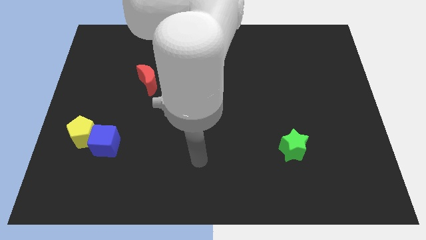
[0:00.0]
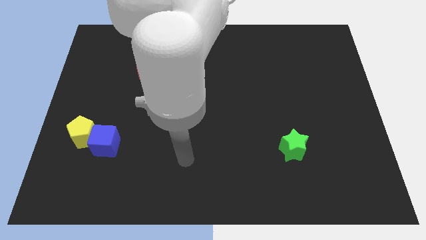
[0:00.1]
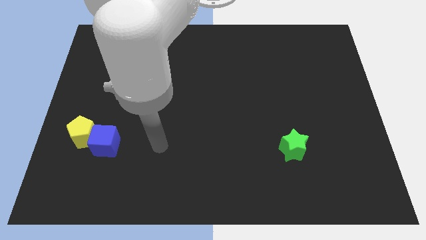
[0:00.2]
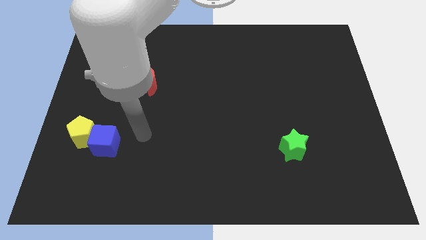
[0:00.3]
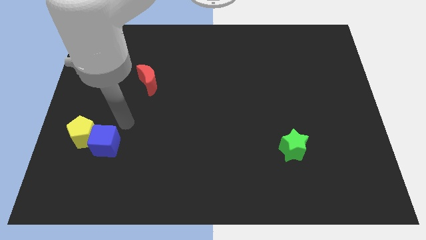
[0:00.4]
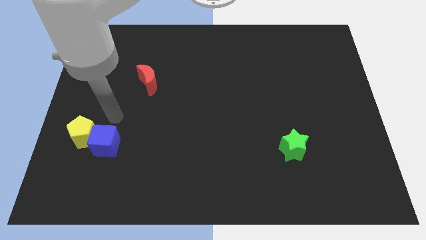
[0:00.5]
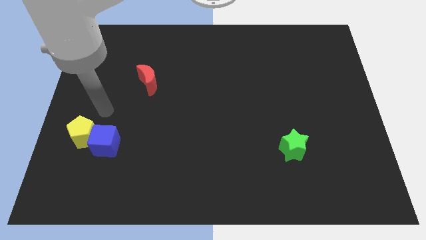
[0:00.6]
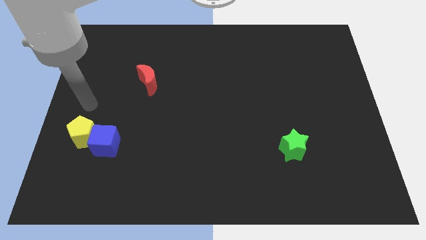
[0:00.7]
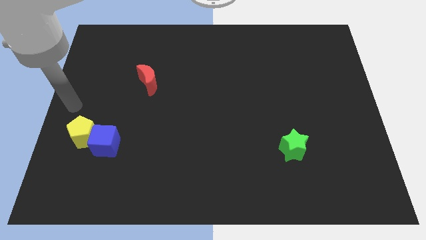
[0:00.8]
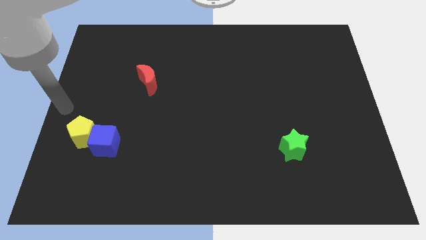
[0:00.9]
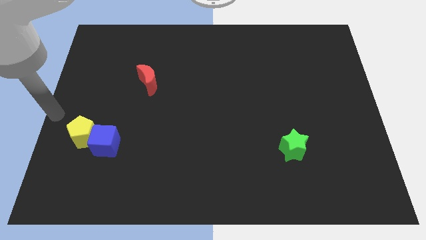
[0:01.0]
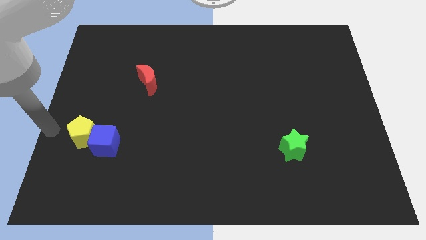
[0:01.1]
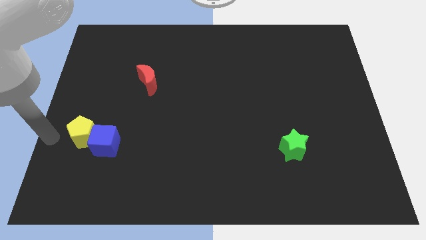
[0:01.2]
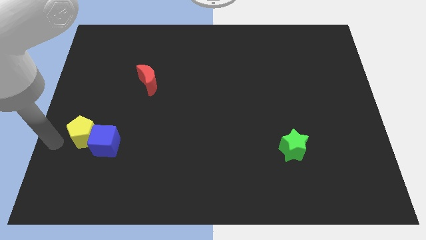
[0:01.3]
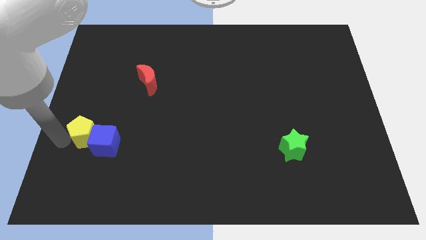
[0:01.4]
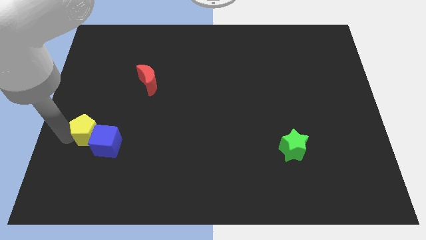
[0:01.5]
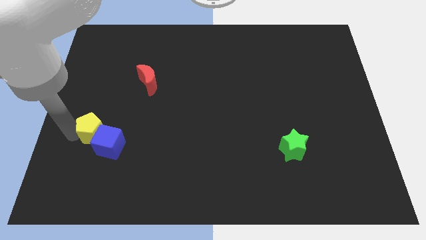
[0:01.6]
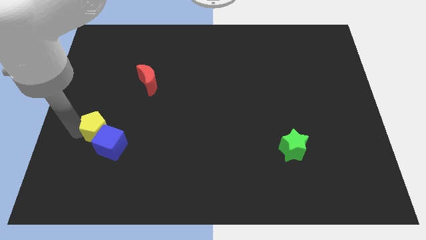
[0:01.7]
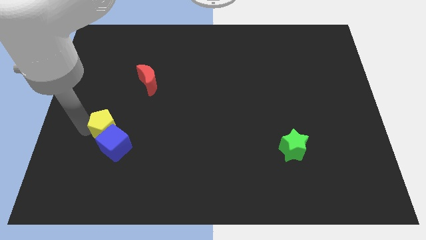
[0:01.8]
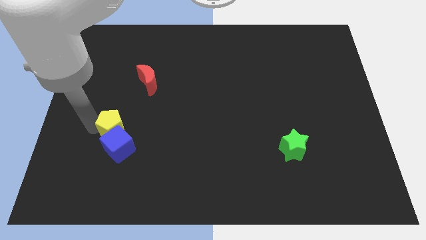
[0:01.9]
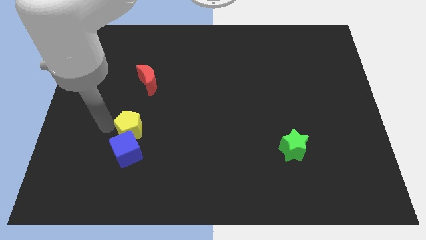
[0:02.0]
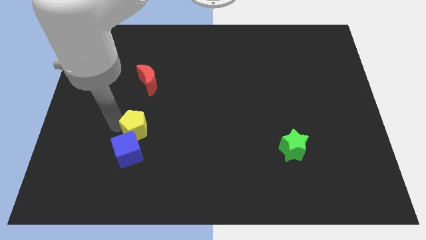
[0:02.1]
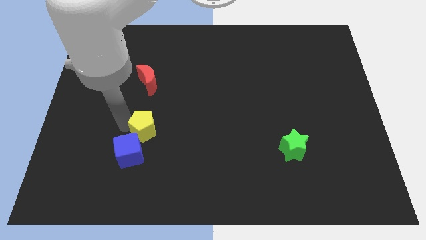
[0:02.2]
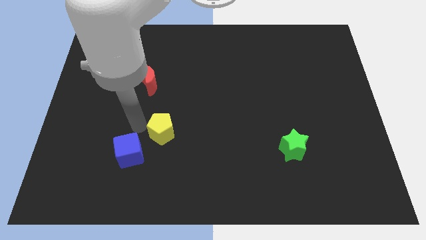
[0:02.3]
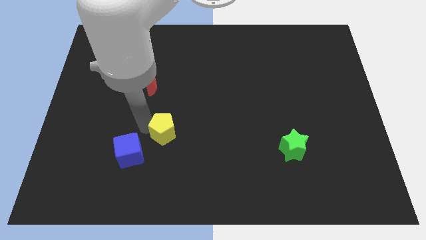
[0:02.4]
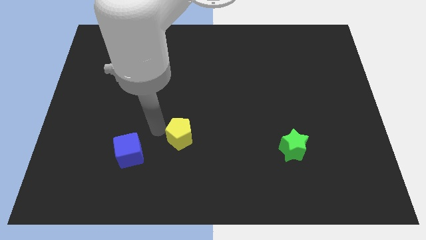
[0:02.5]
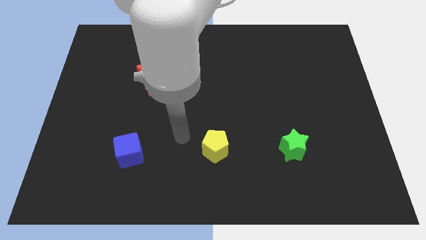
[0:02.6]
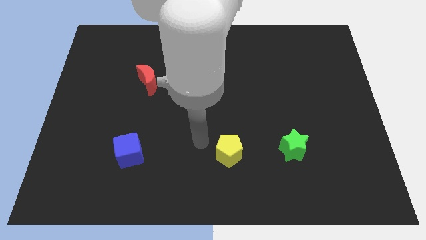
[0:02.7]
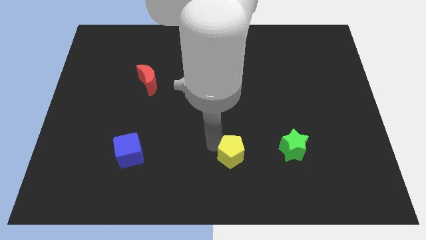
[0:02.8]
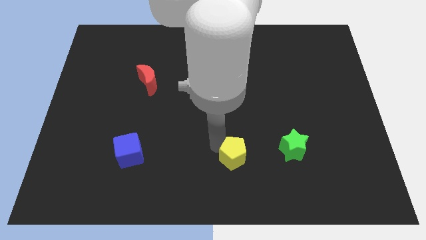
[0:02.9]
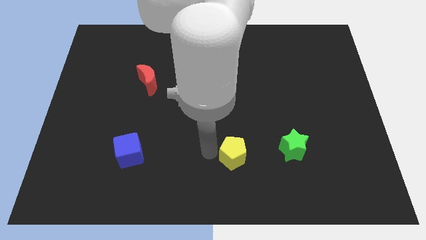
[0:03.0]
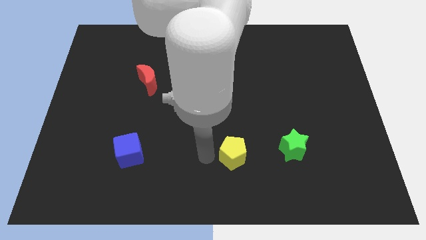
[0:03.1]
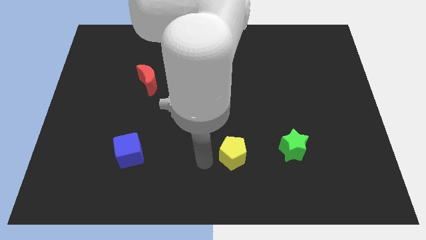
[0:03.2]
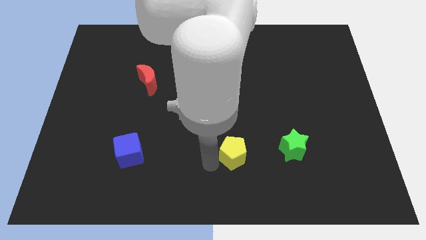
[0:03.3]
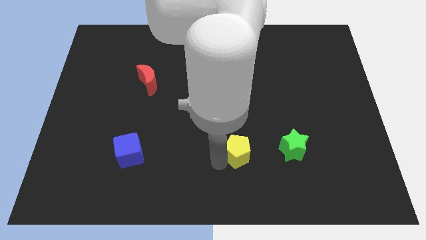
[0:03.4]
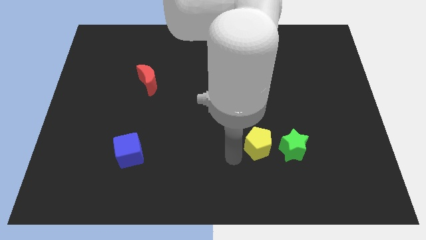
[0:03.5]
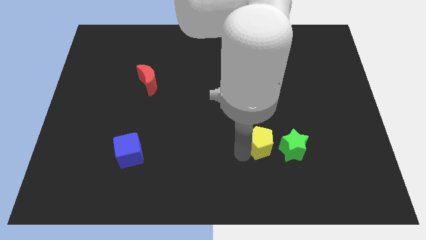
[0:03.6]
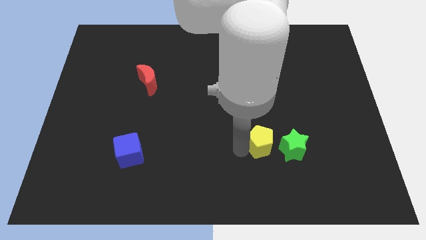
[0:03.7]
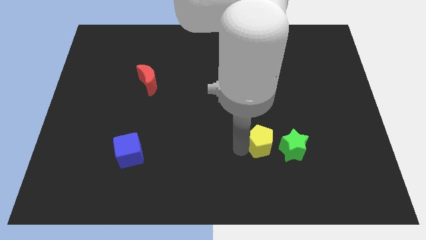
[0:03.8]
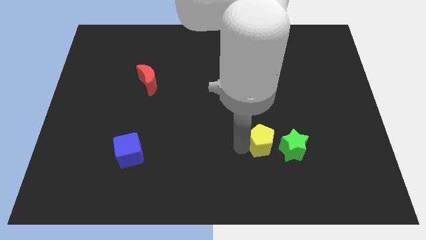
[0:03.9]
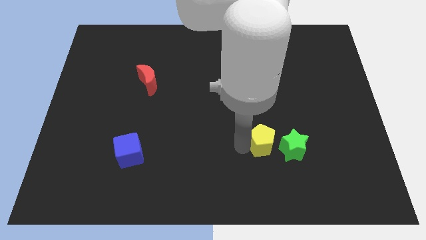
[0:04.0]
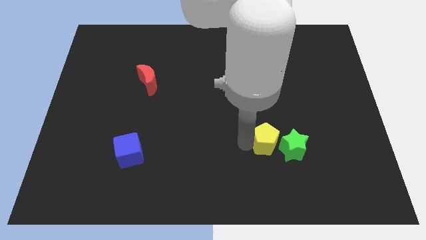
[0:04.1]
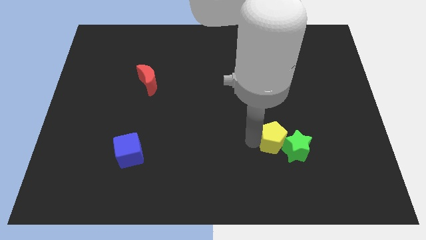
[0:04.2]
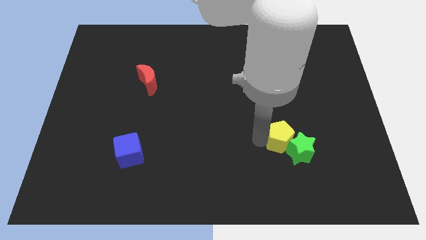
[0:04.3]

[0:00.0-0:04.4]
slide the yellow block to the star

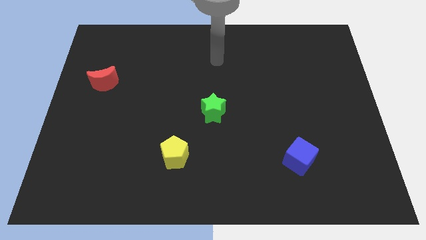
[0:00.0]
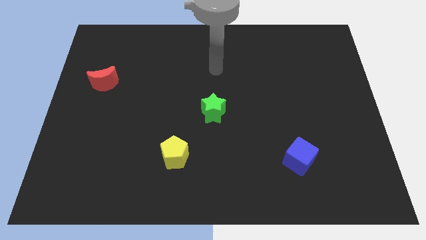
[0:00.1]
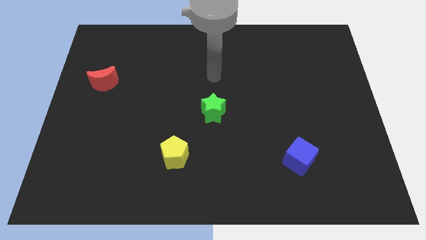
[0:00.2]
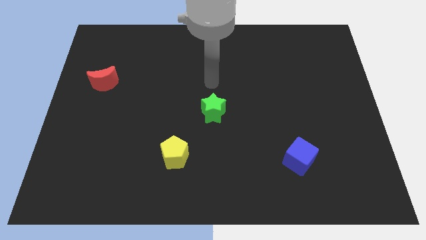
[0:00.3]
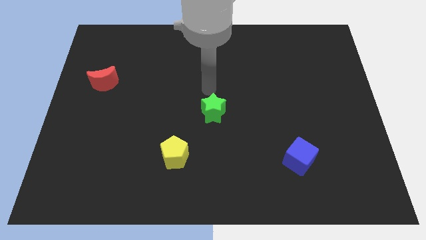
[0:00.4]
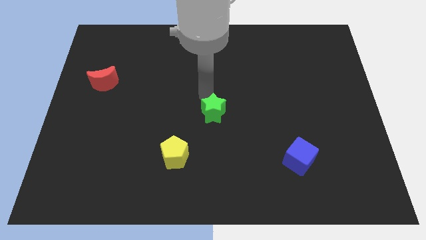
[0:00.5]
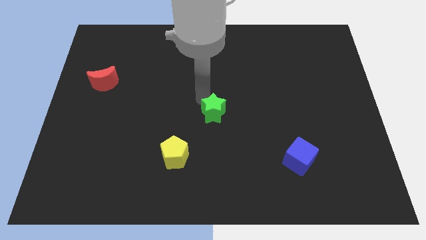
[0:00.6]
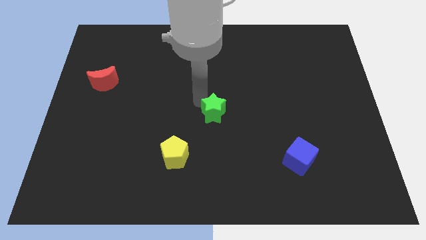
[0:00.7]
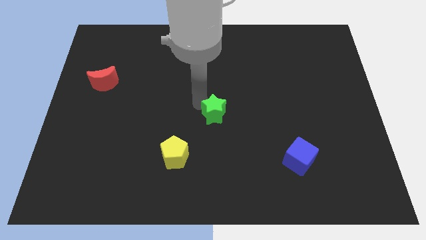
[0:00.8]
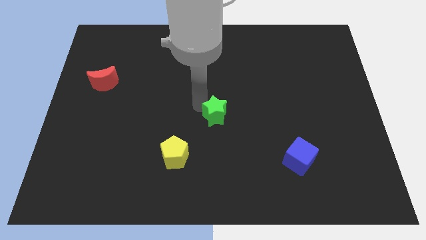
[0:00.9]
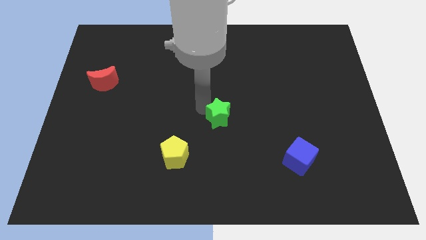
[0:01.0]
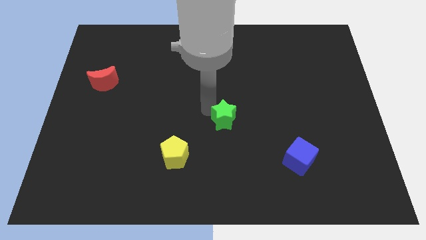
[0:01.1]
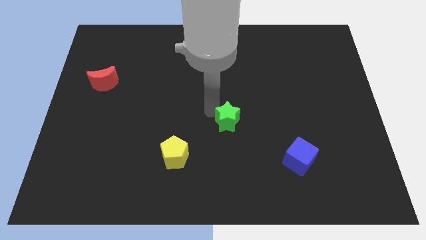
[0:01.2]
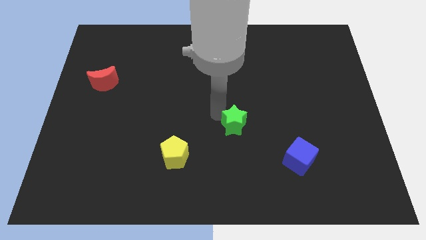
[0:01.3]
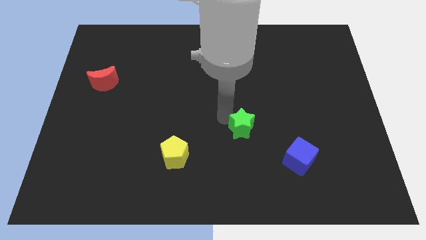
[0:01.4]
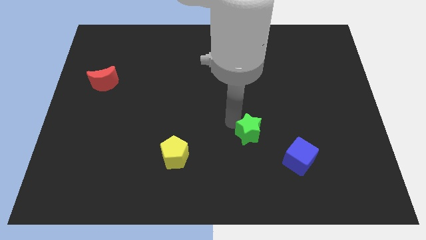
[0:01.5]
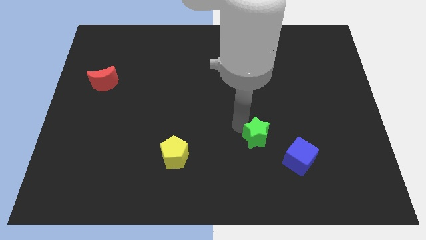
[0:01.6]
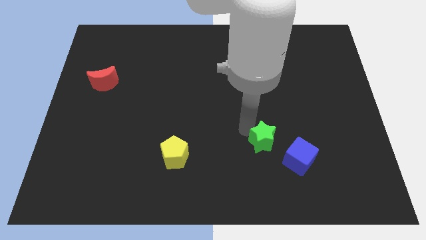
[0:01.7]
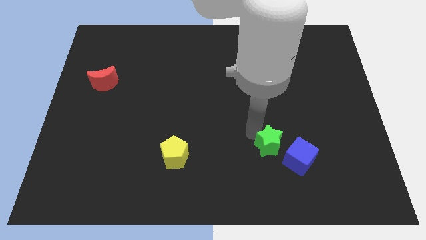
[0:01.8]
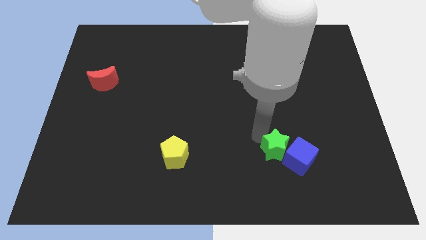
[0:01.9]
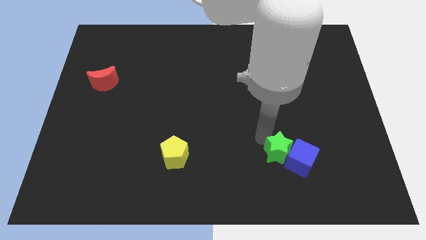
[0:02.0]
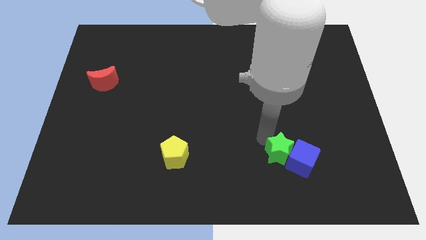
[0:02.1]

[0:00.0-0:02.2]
move the green star towards the blue block

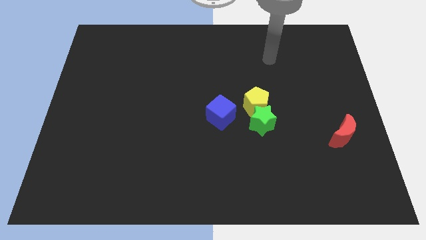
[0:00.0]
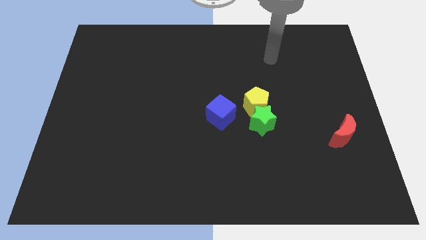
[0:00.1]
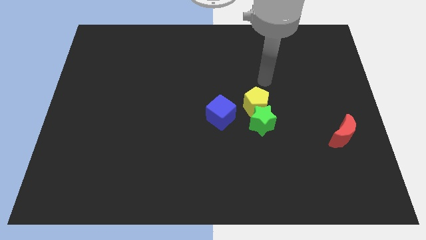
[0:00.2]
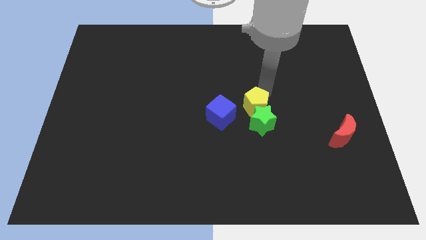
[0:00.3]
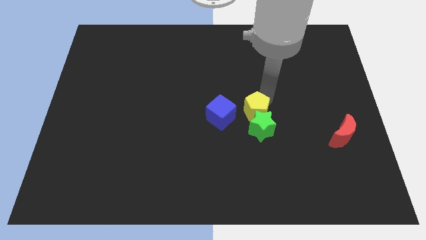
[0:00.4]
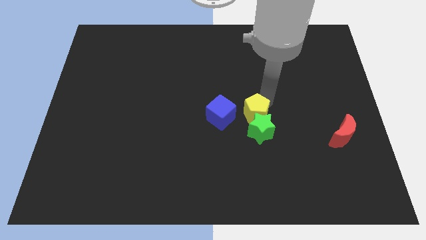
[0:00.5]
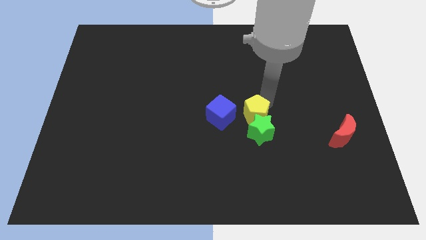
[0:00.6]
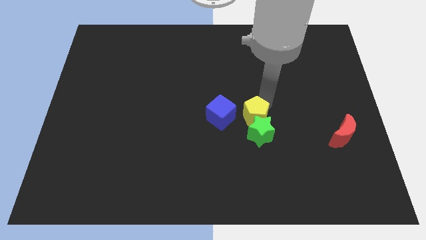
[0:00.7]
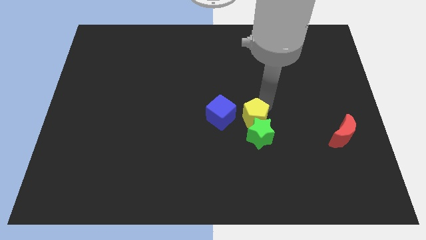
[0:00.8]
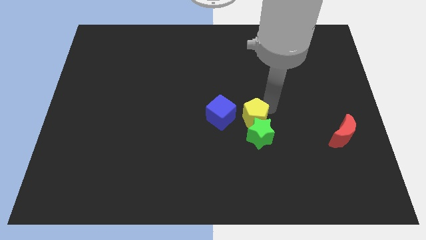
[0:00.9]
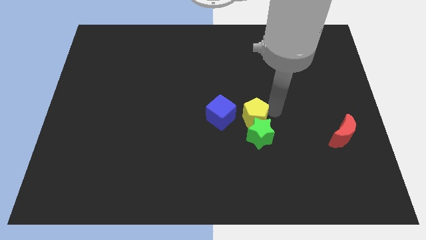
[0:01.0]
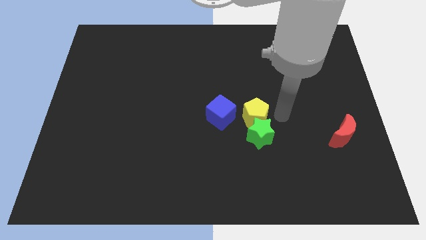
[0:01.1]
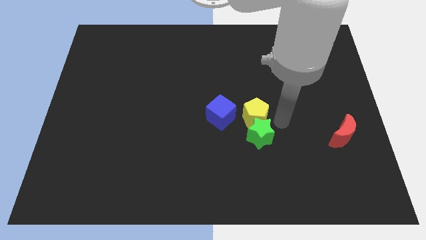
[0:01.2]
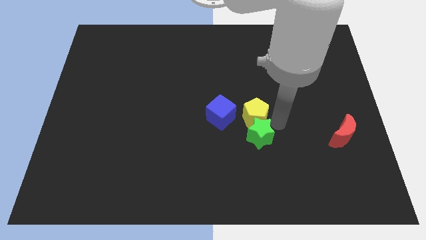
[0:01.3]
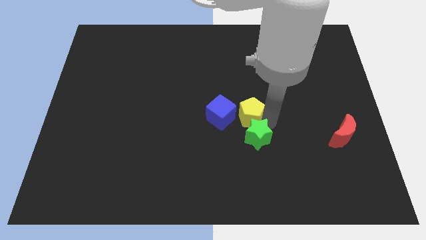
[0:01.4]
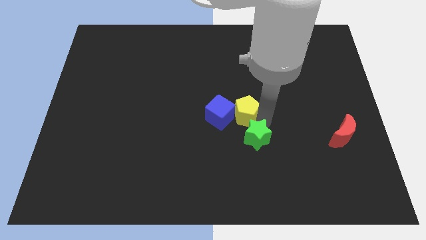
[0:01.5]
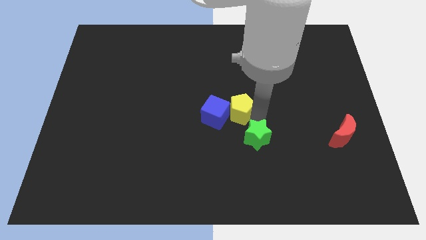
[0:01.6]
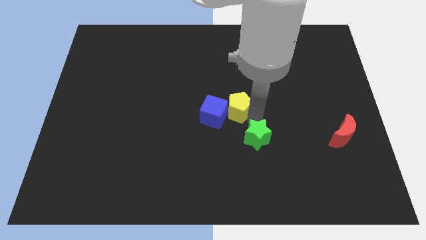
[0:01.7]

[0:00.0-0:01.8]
push the pentagon close to the cube

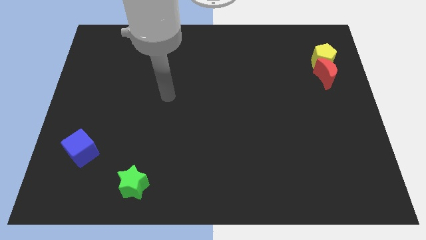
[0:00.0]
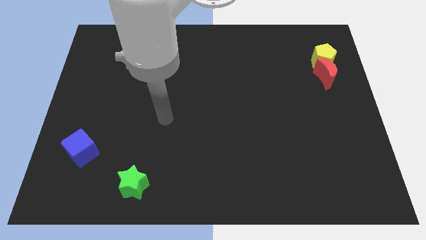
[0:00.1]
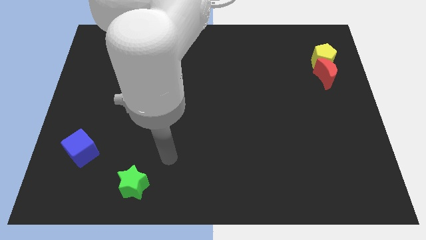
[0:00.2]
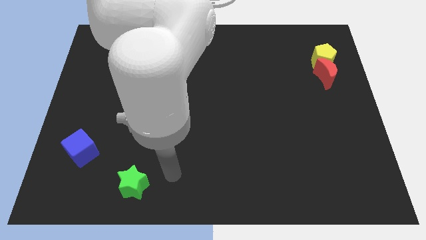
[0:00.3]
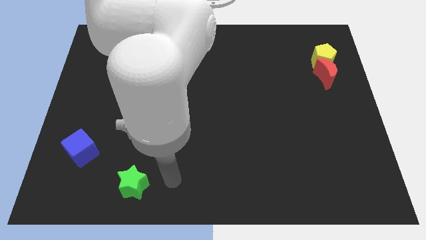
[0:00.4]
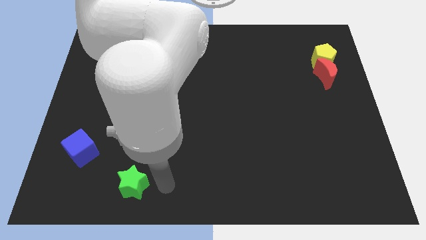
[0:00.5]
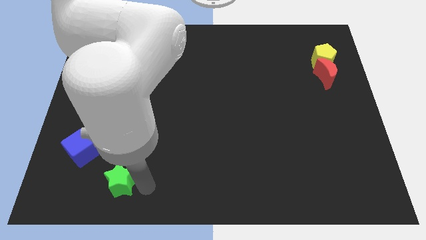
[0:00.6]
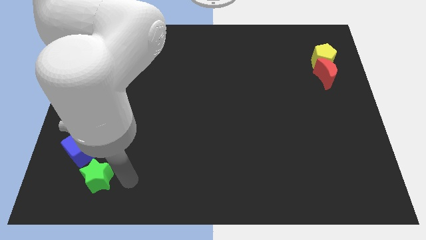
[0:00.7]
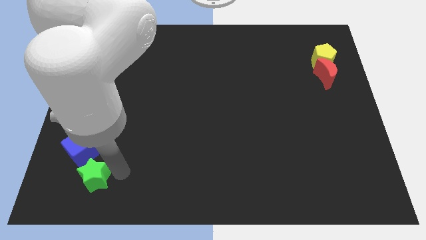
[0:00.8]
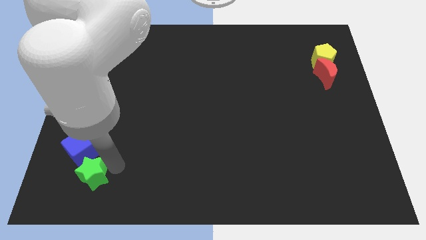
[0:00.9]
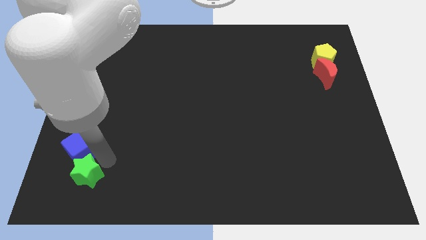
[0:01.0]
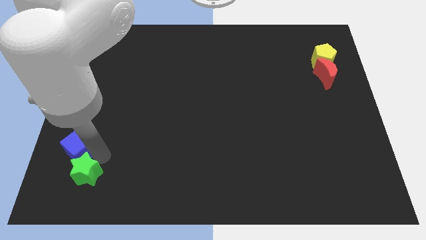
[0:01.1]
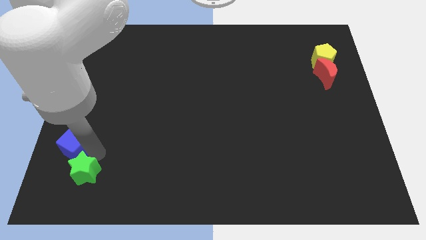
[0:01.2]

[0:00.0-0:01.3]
put the green block next to the blue cube
